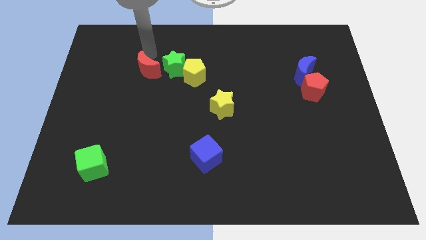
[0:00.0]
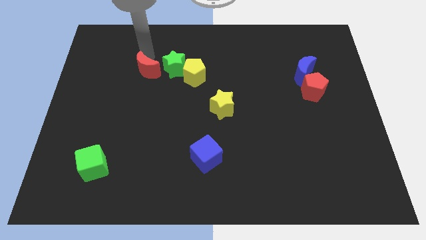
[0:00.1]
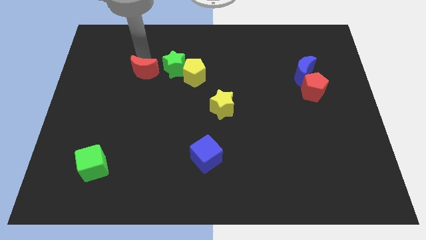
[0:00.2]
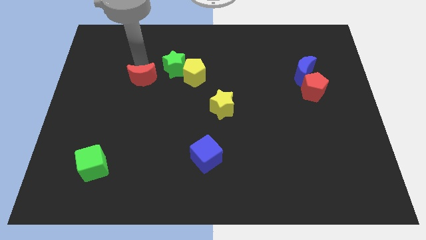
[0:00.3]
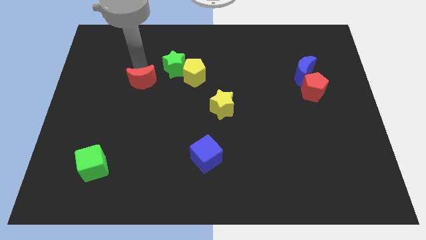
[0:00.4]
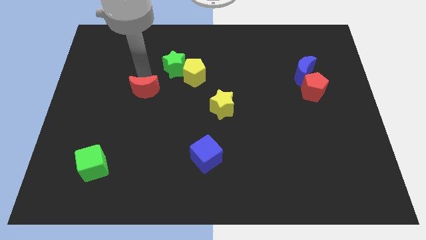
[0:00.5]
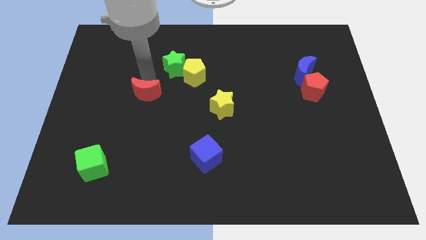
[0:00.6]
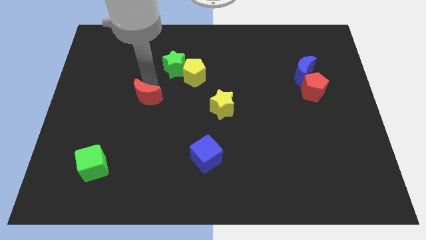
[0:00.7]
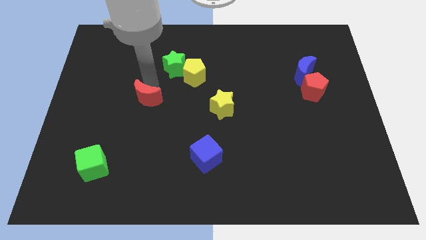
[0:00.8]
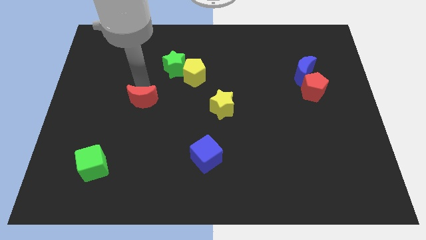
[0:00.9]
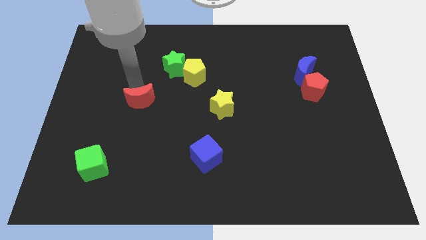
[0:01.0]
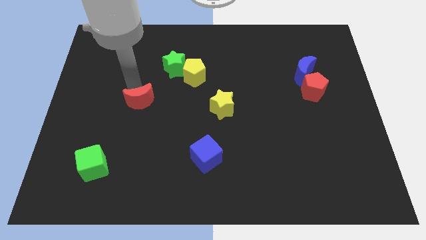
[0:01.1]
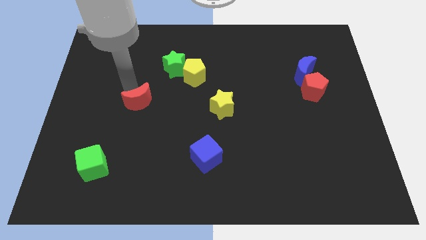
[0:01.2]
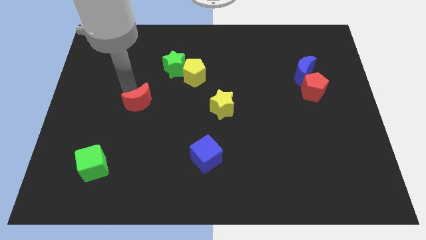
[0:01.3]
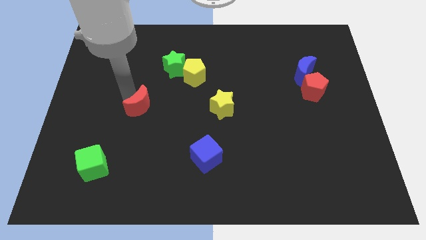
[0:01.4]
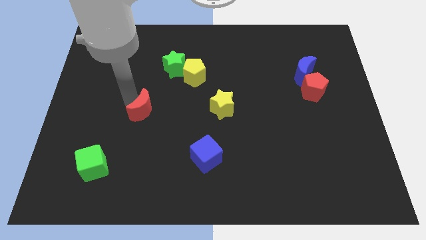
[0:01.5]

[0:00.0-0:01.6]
move the red crescent parallel to yellow star

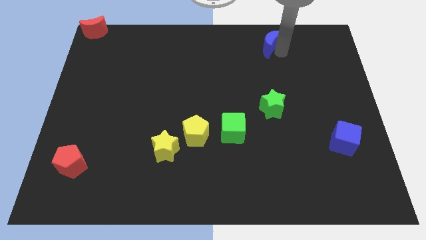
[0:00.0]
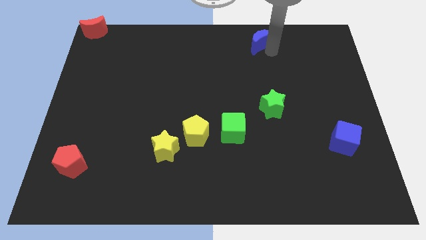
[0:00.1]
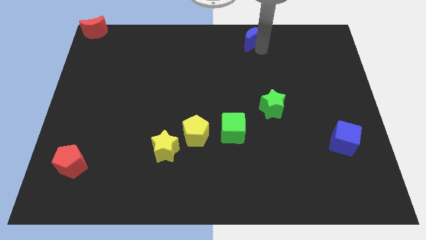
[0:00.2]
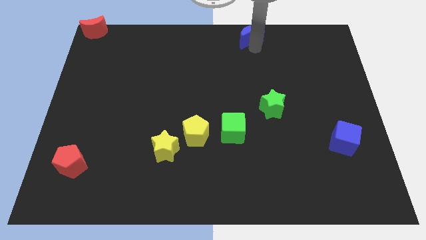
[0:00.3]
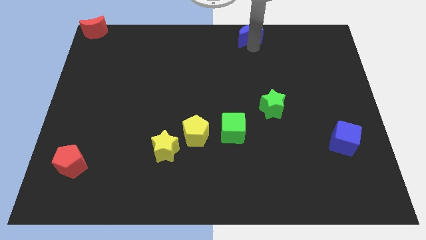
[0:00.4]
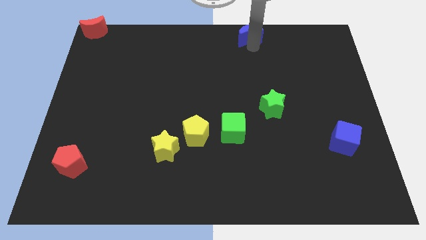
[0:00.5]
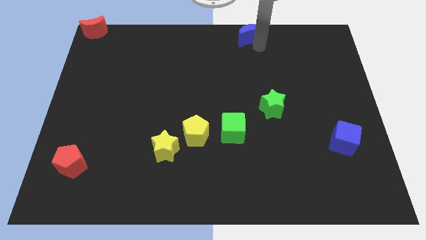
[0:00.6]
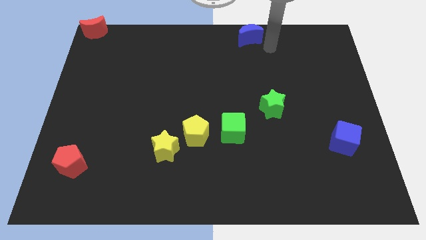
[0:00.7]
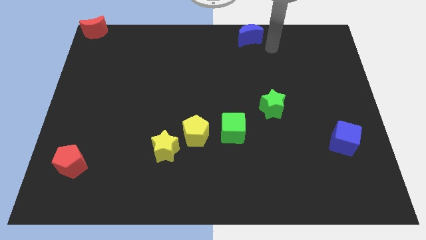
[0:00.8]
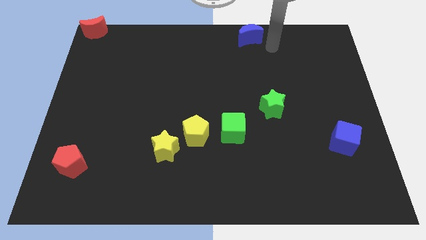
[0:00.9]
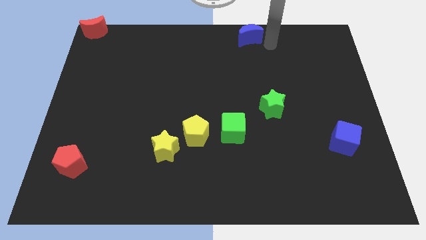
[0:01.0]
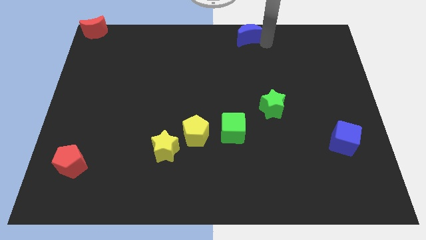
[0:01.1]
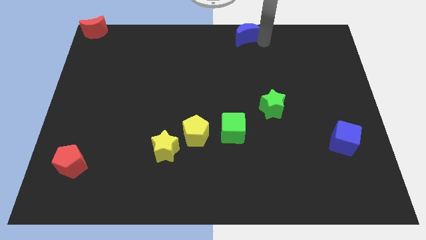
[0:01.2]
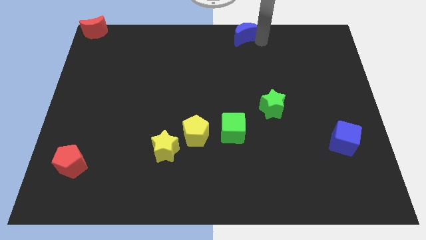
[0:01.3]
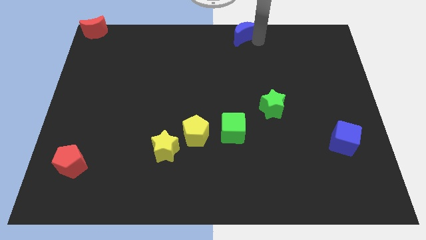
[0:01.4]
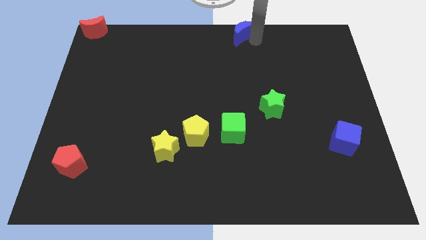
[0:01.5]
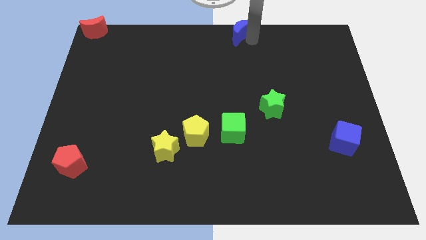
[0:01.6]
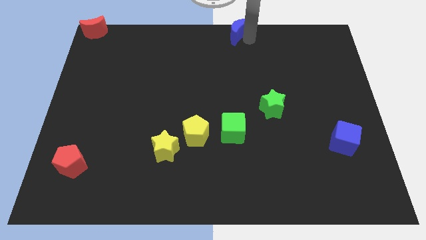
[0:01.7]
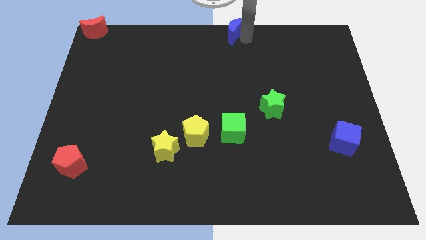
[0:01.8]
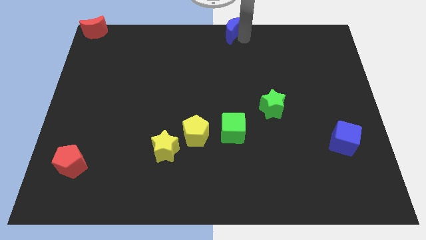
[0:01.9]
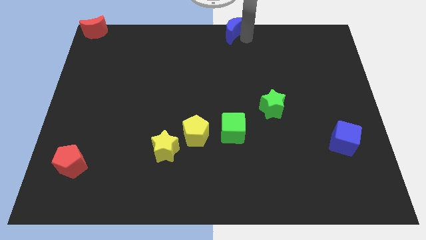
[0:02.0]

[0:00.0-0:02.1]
slide the blue cube diagonally top left to the green star

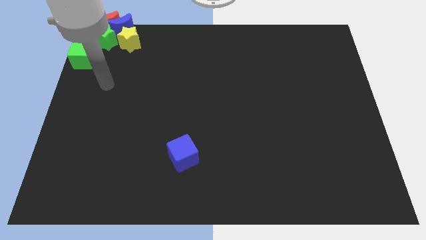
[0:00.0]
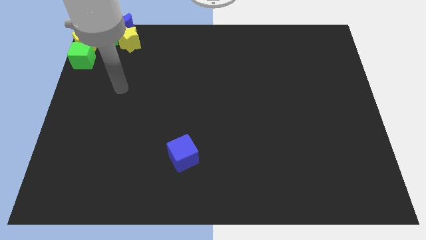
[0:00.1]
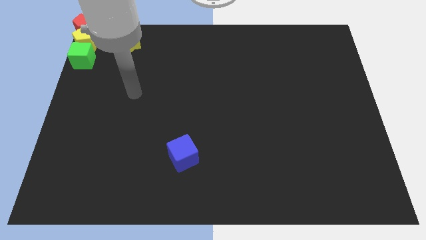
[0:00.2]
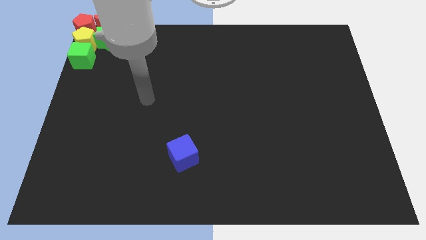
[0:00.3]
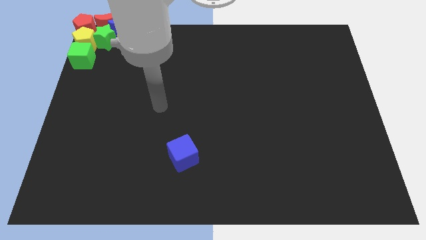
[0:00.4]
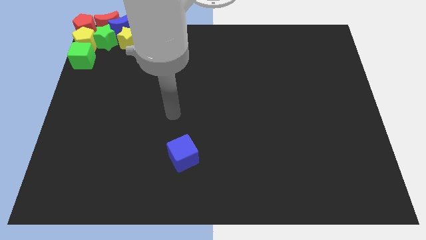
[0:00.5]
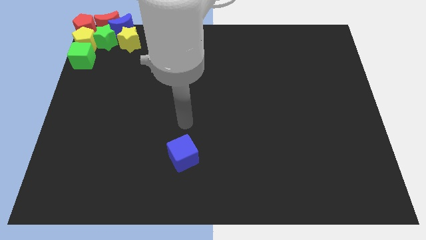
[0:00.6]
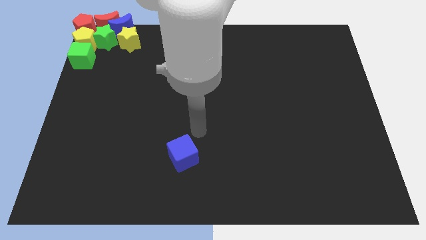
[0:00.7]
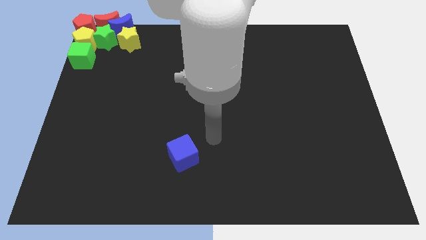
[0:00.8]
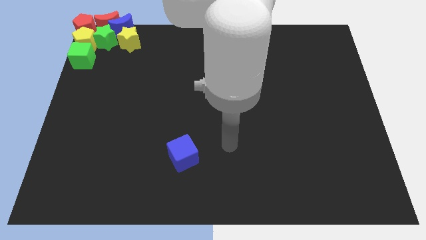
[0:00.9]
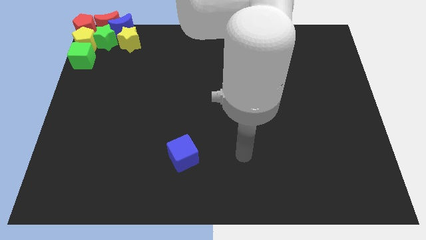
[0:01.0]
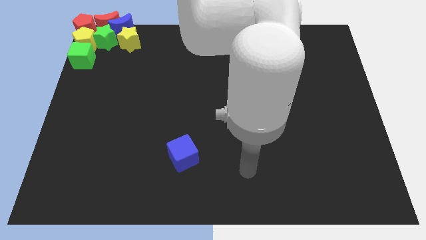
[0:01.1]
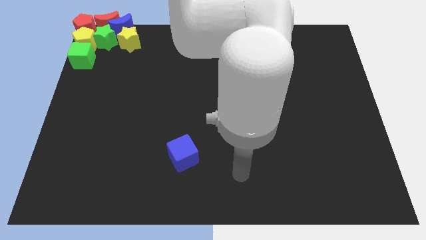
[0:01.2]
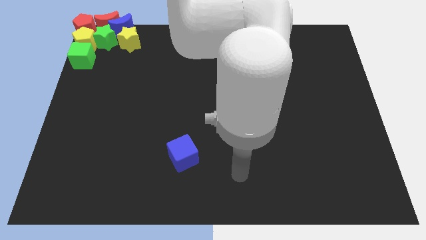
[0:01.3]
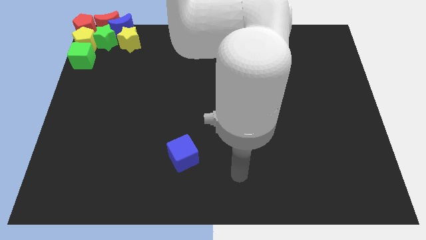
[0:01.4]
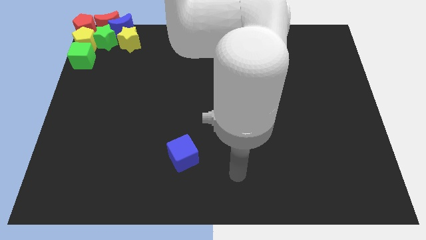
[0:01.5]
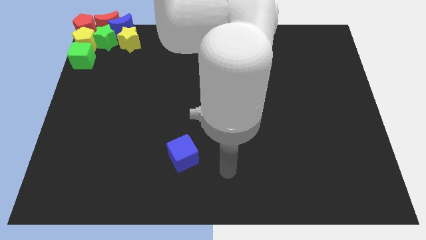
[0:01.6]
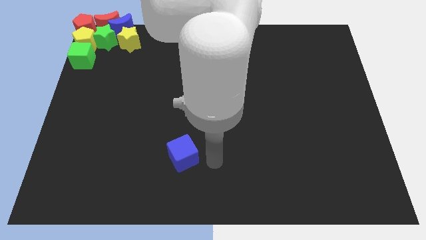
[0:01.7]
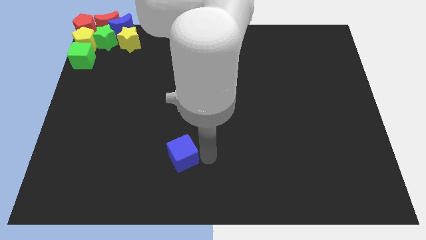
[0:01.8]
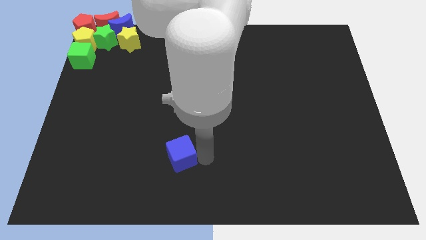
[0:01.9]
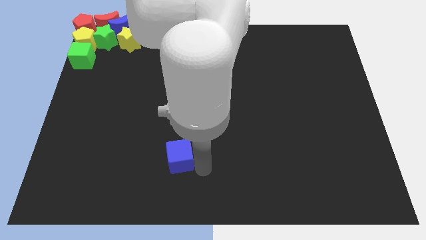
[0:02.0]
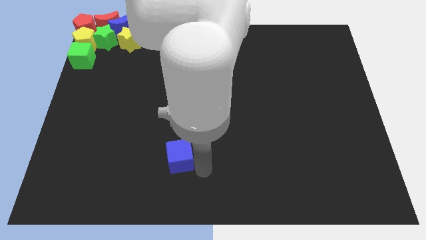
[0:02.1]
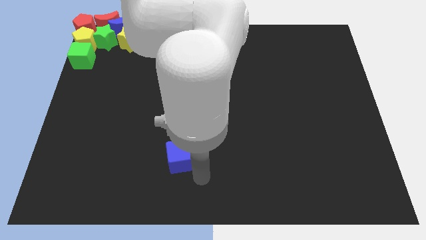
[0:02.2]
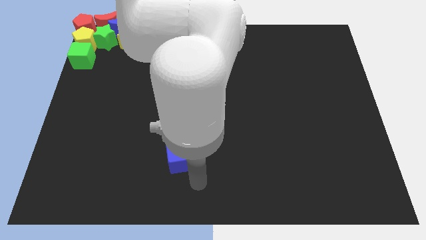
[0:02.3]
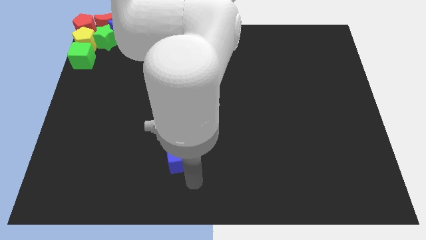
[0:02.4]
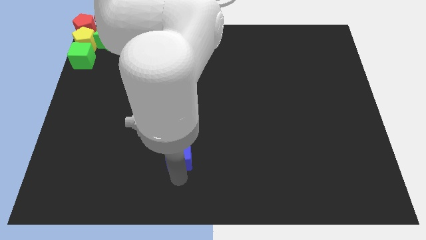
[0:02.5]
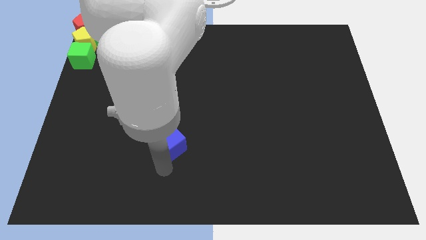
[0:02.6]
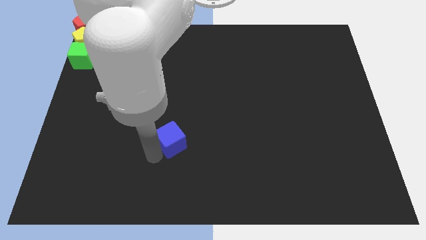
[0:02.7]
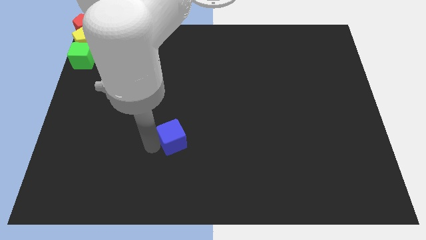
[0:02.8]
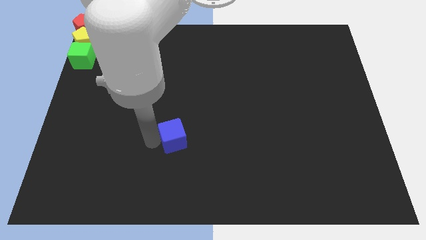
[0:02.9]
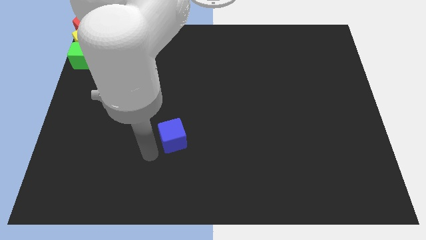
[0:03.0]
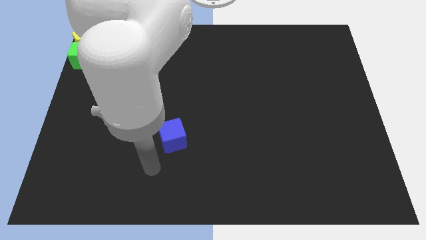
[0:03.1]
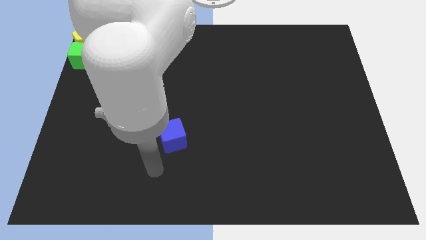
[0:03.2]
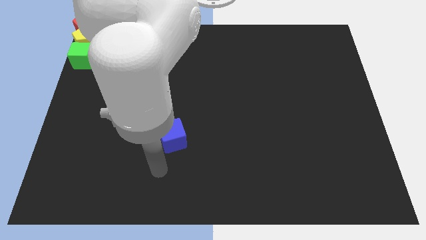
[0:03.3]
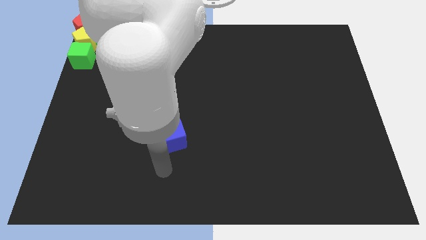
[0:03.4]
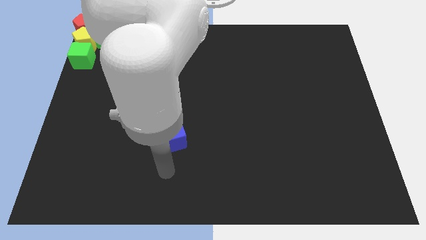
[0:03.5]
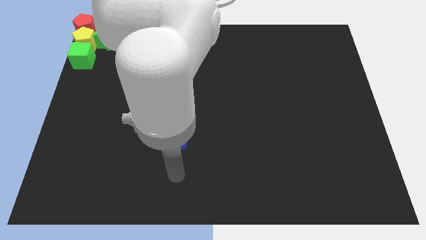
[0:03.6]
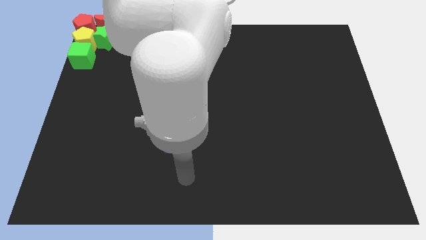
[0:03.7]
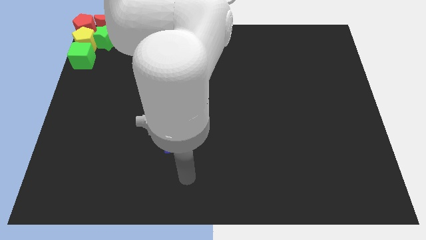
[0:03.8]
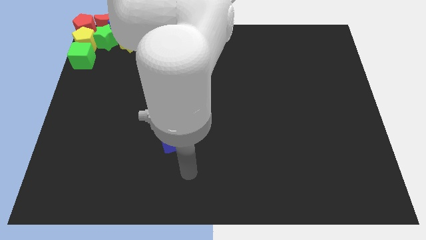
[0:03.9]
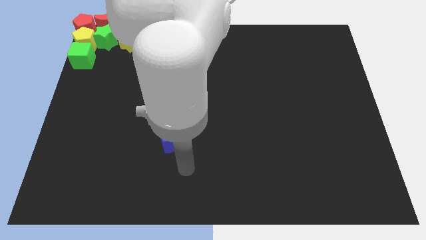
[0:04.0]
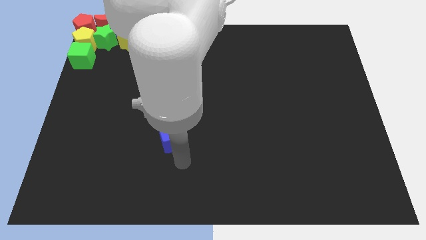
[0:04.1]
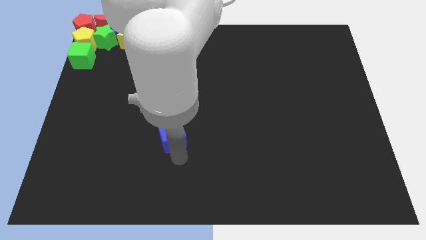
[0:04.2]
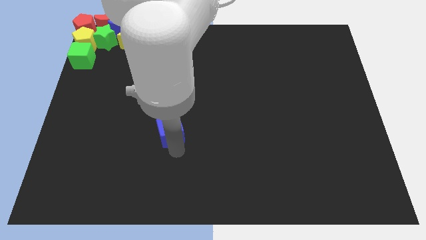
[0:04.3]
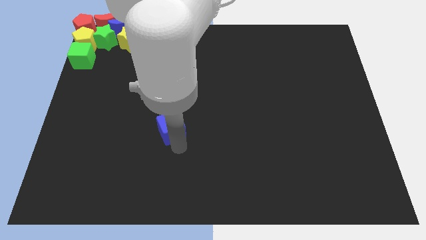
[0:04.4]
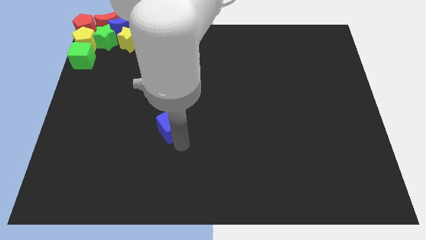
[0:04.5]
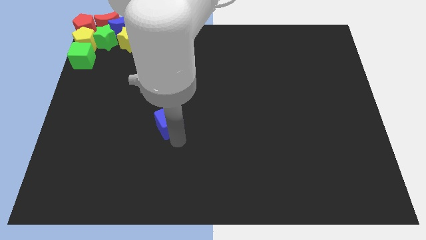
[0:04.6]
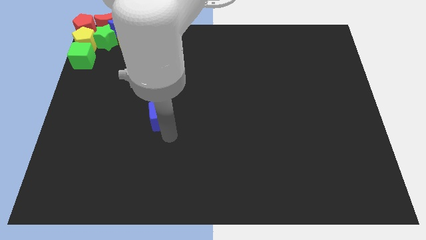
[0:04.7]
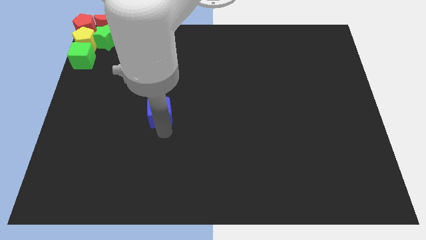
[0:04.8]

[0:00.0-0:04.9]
move the blue cube towards the group of blocks

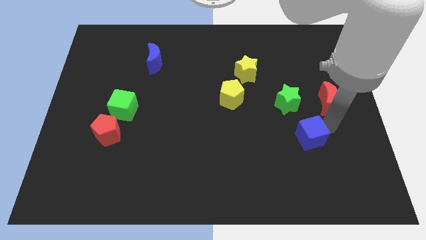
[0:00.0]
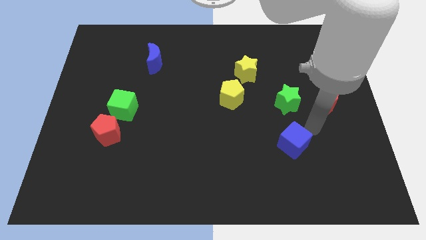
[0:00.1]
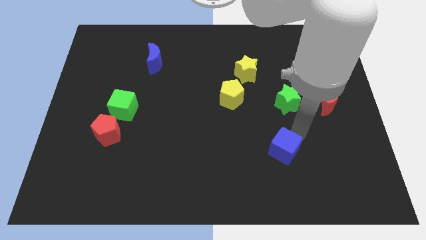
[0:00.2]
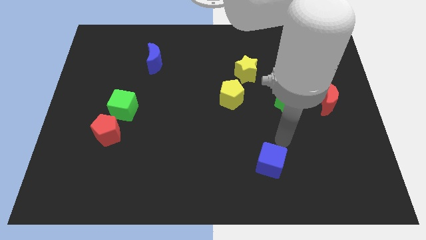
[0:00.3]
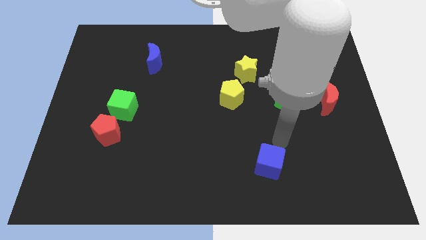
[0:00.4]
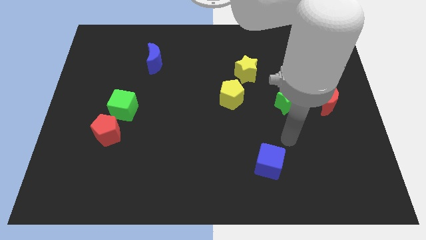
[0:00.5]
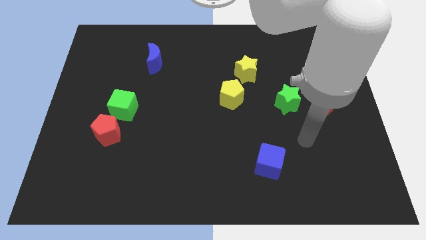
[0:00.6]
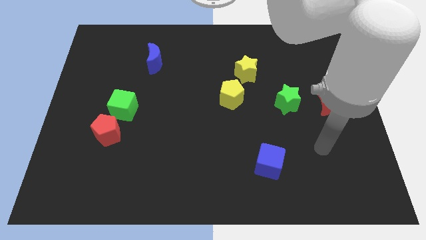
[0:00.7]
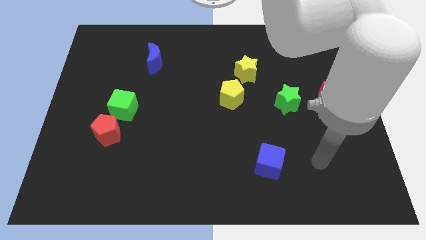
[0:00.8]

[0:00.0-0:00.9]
push blue cube slightly towards the down
